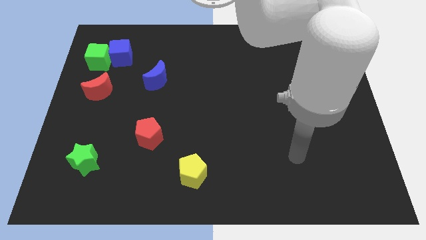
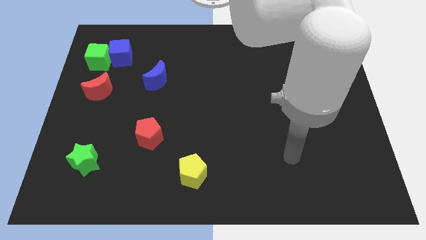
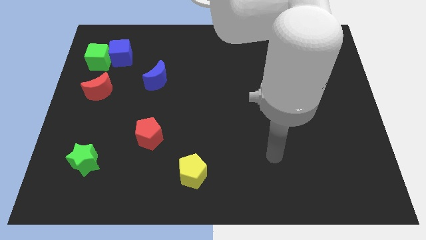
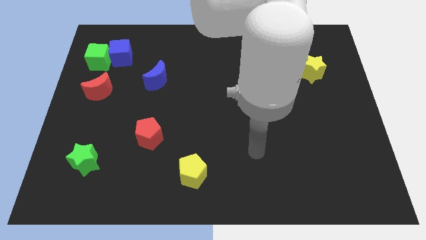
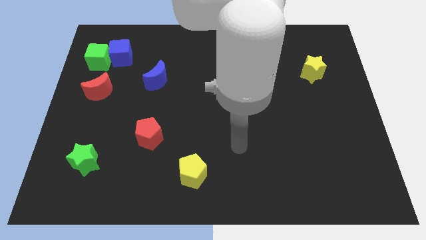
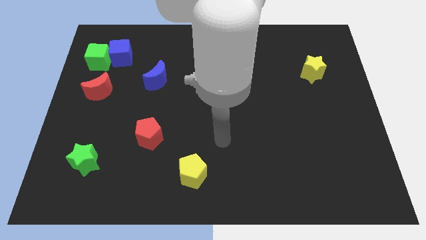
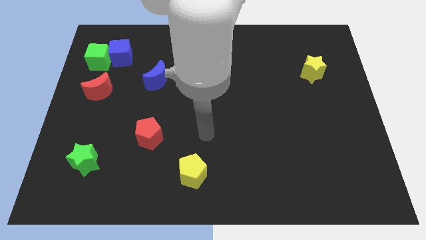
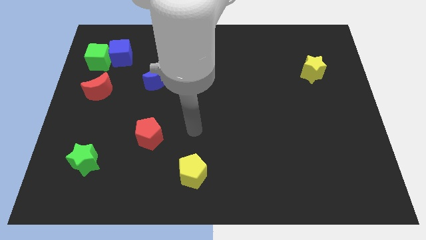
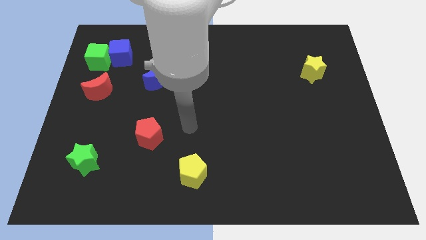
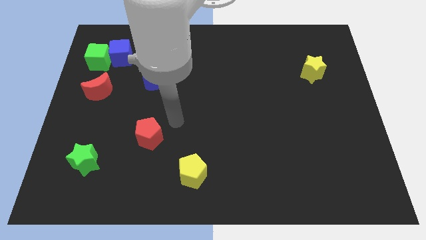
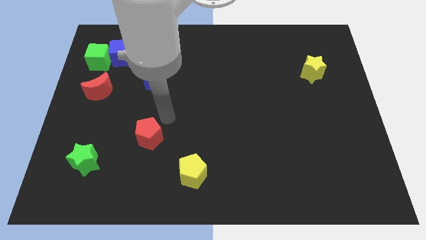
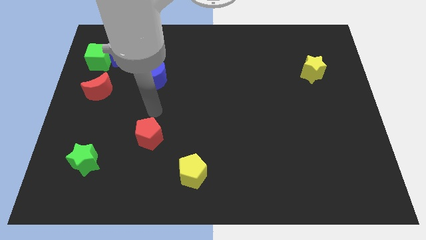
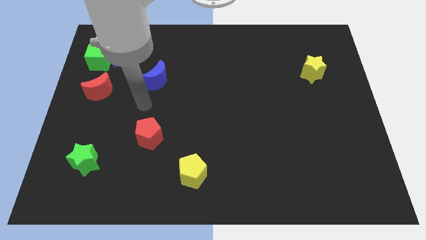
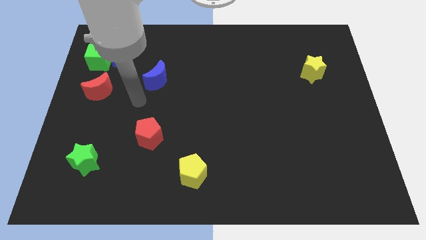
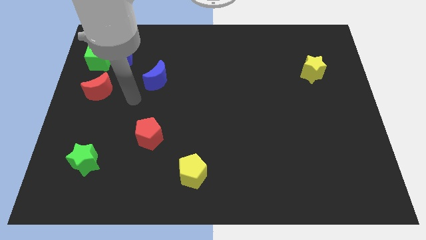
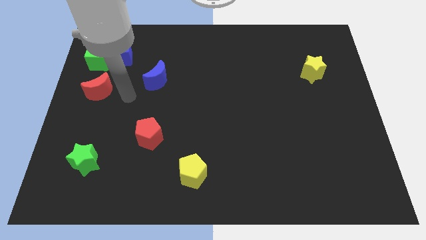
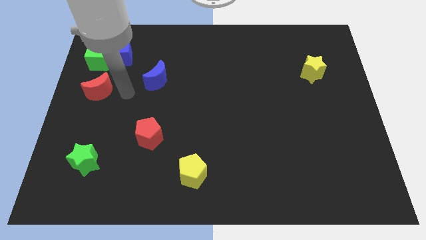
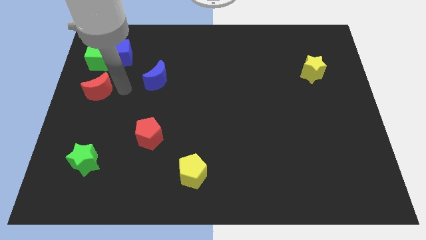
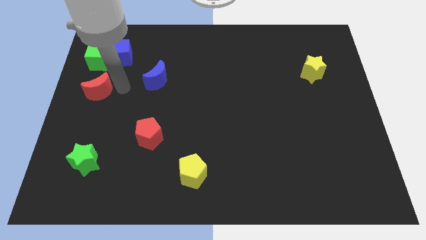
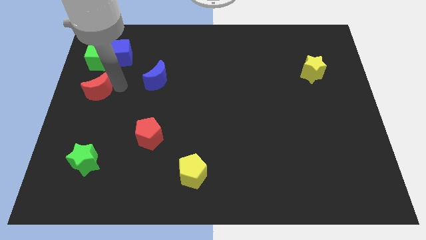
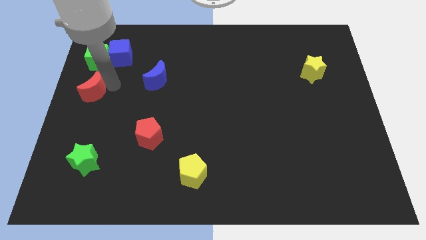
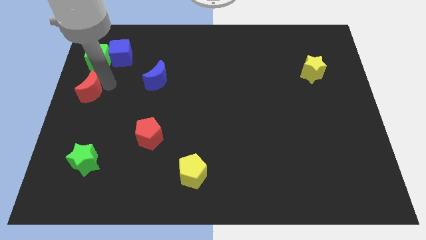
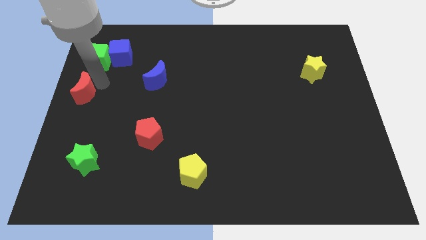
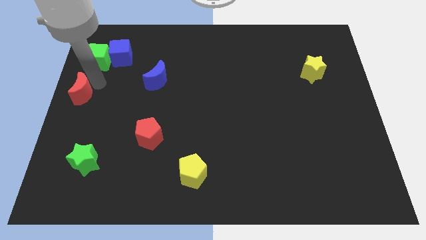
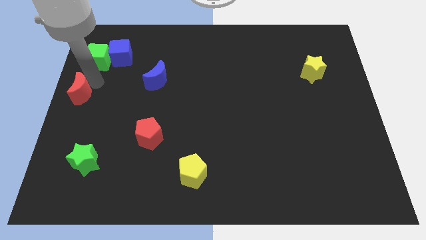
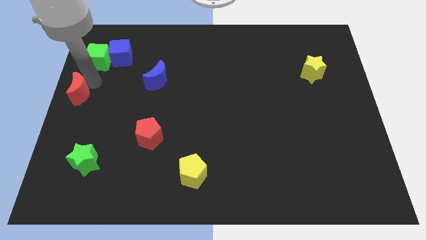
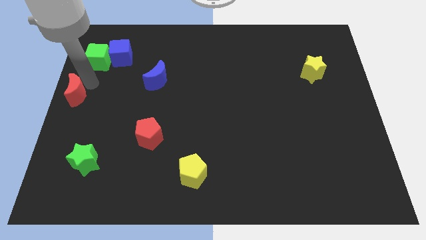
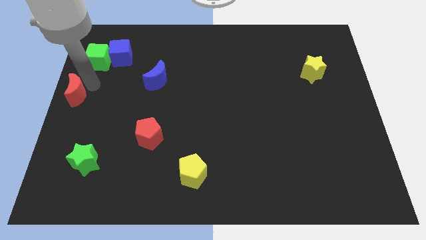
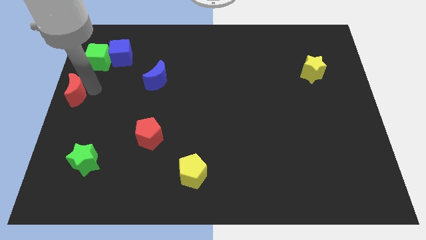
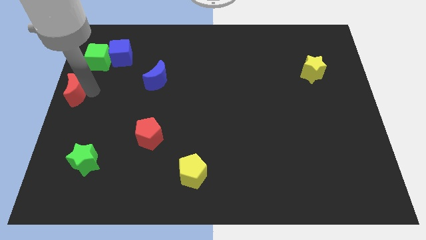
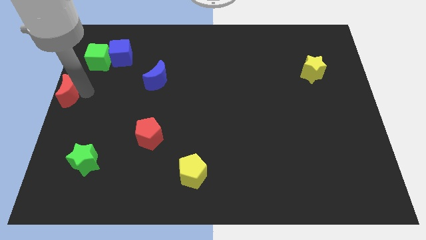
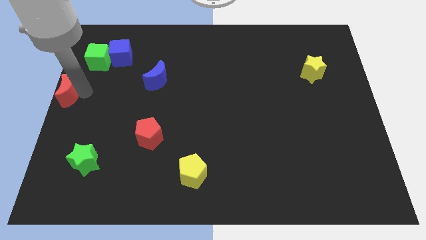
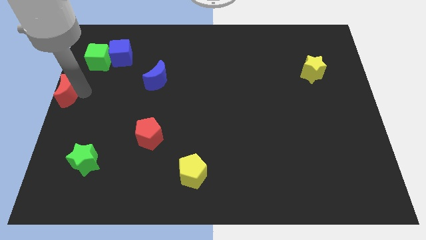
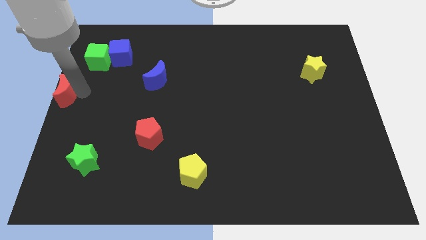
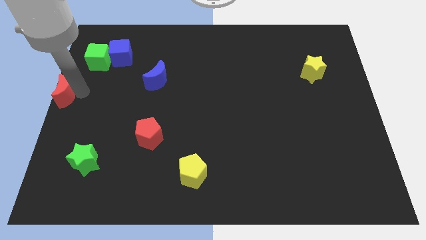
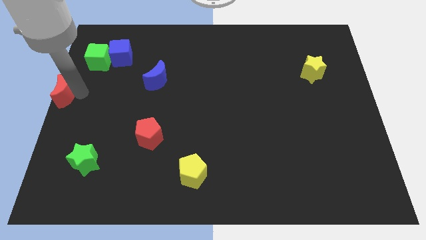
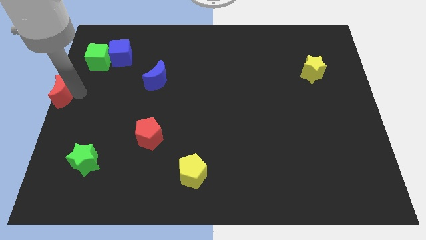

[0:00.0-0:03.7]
move your arm close to the red moon

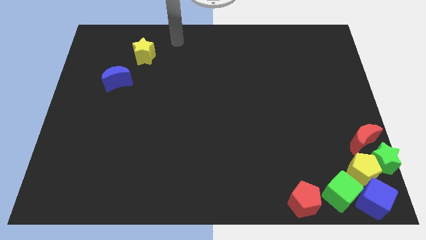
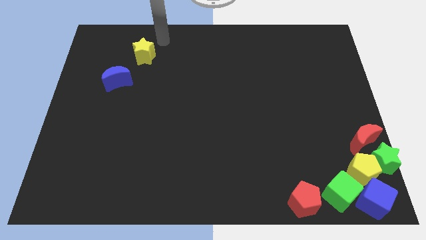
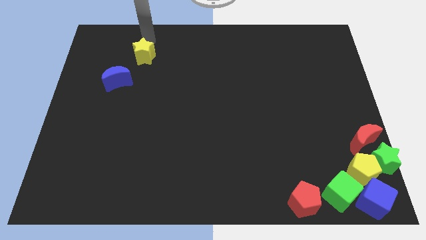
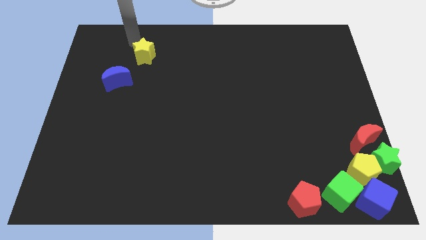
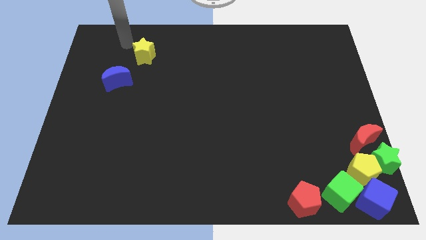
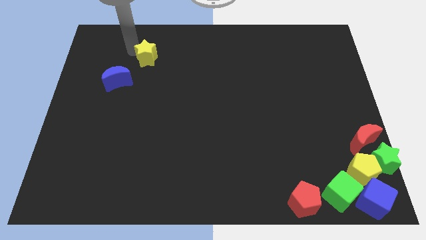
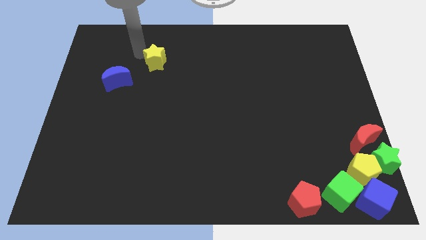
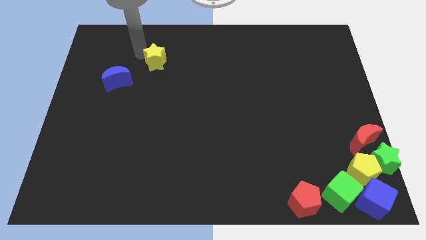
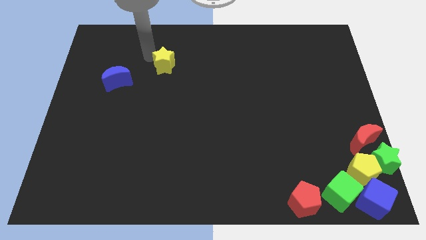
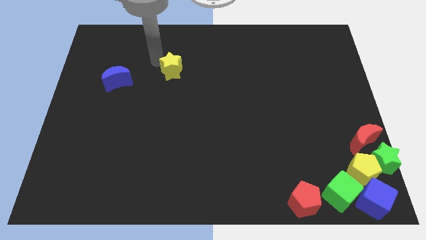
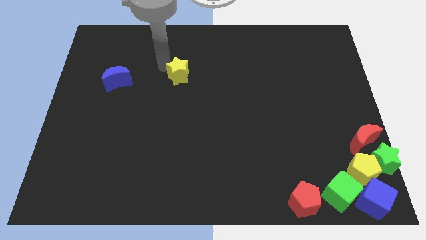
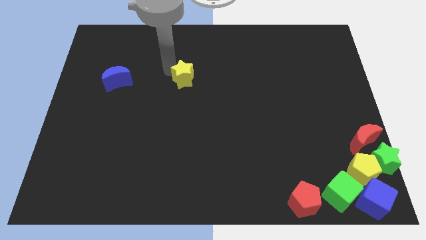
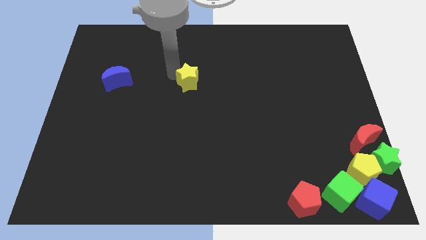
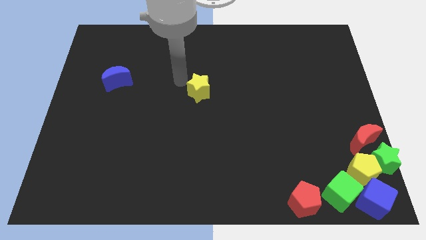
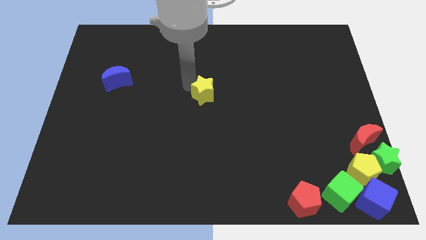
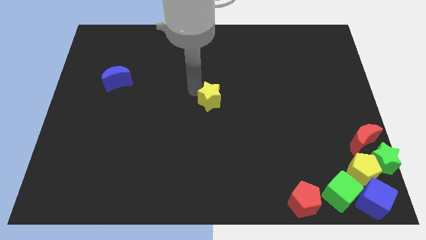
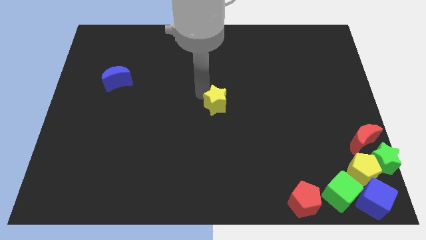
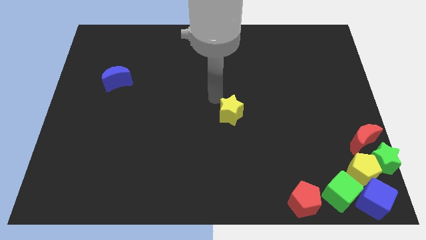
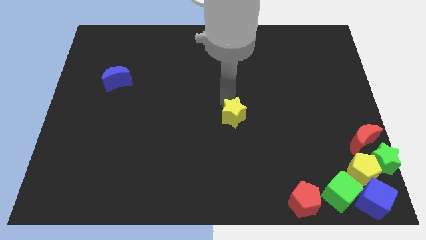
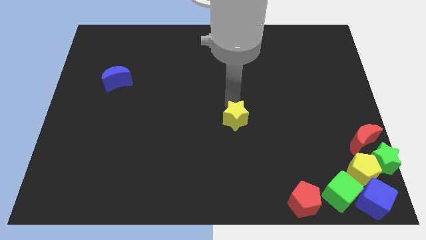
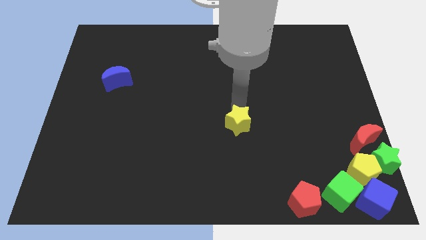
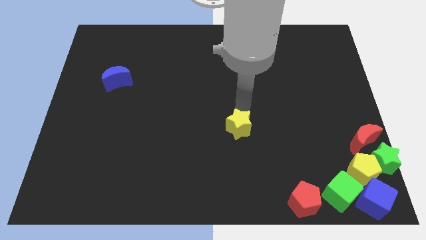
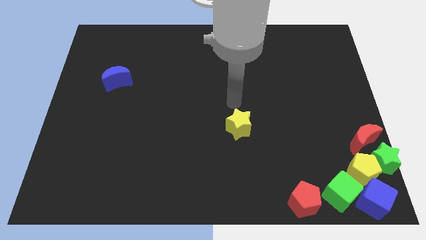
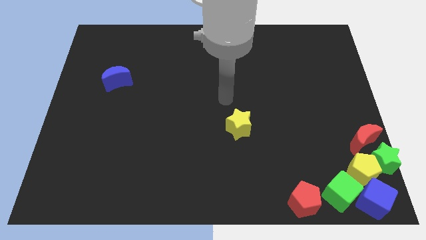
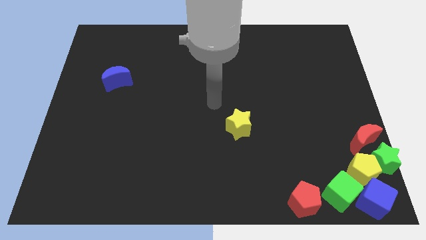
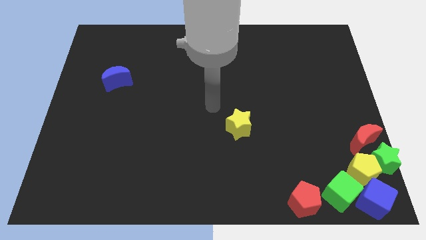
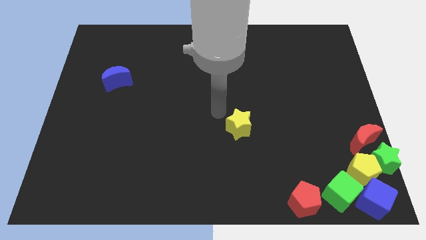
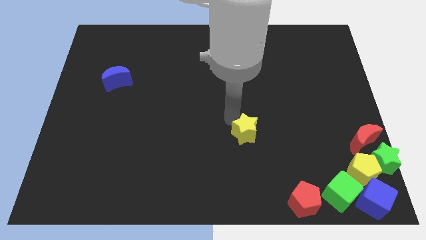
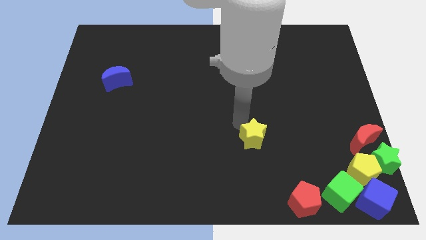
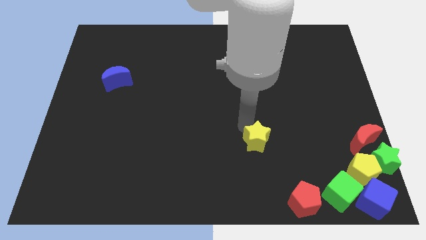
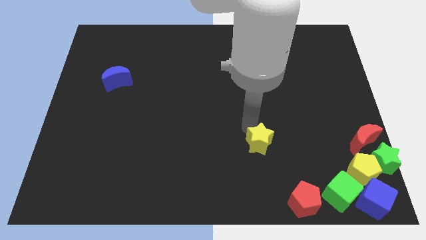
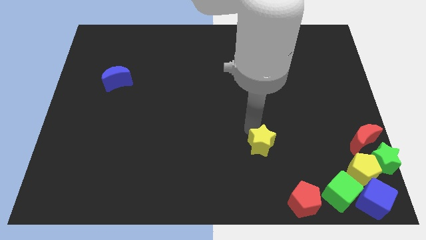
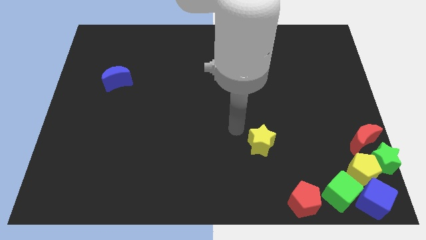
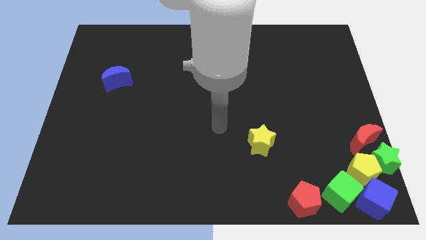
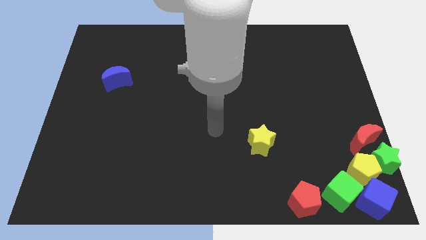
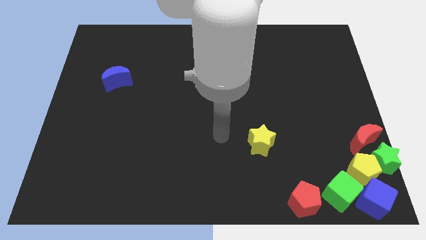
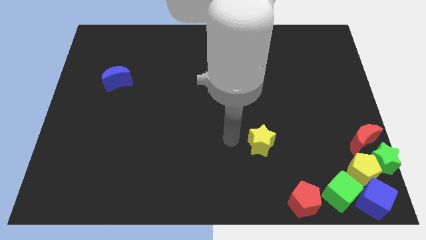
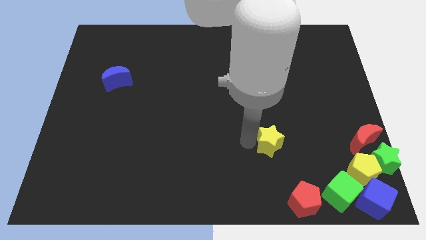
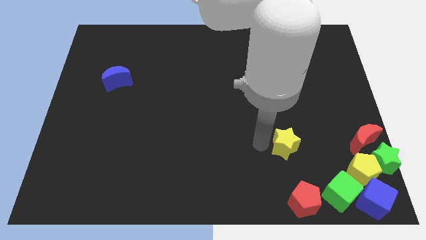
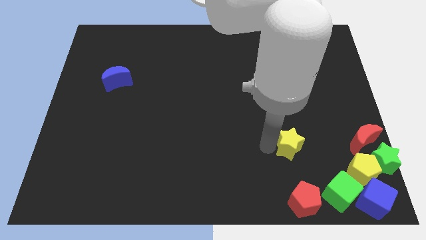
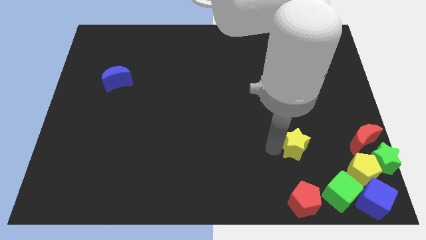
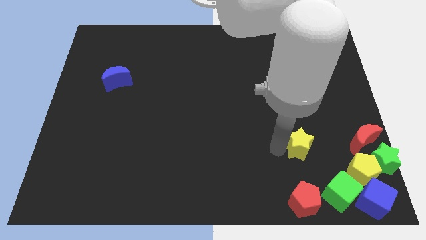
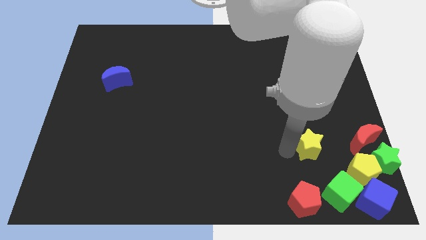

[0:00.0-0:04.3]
push the yellow star to the vertical top side of the red pentagon

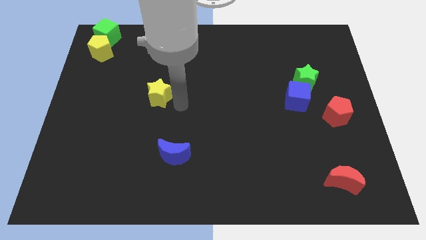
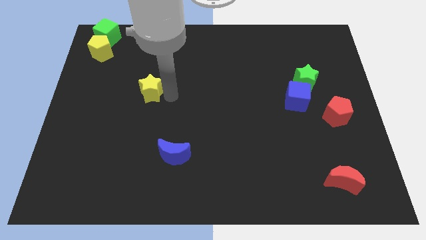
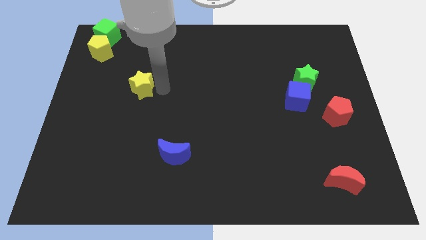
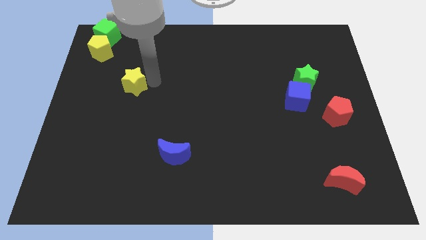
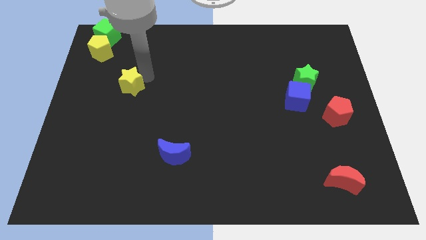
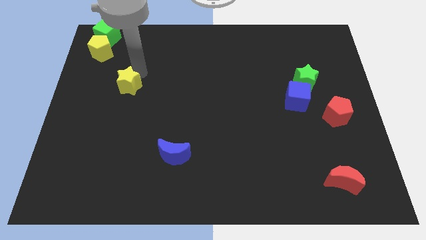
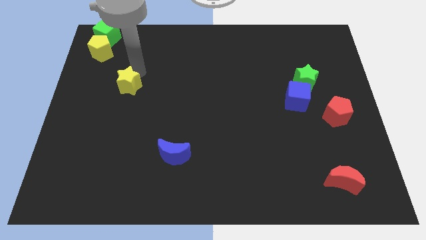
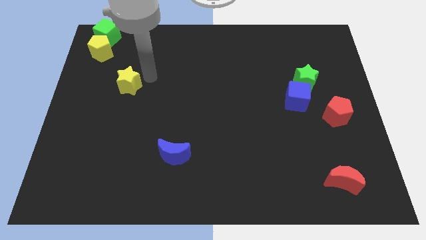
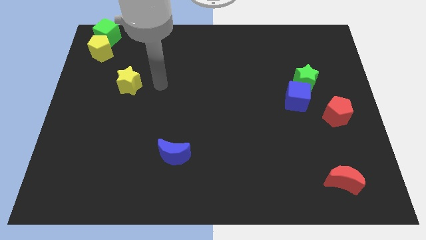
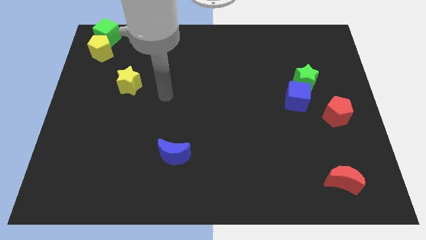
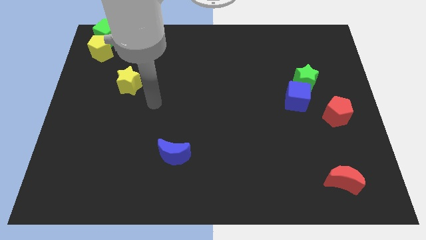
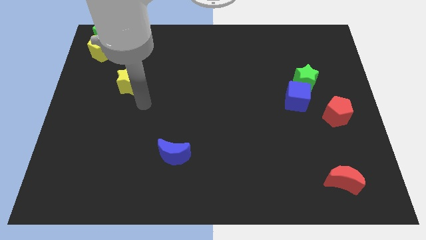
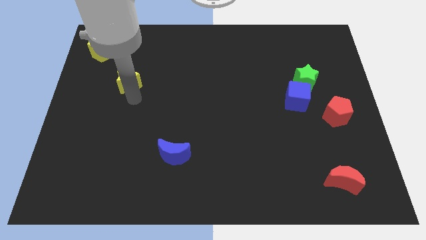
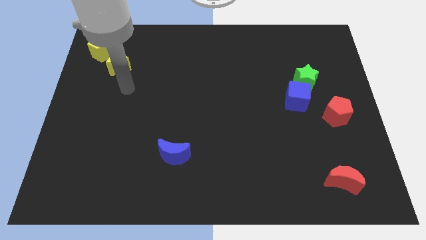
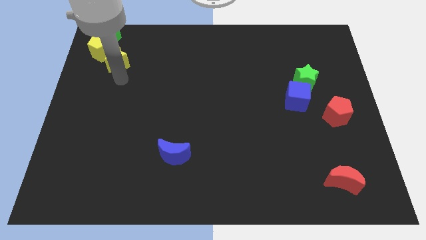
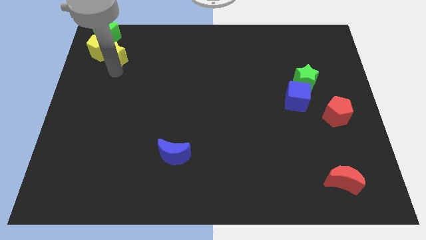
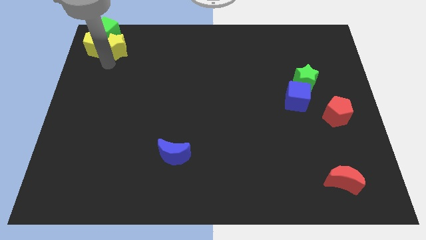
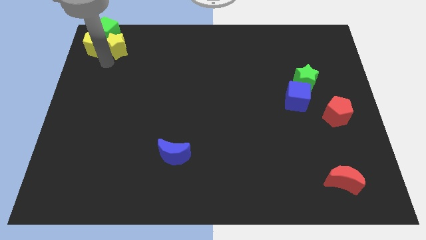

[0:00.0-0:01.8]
place the yellow star below the green cube
